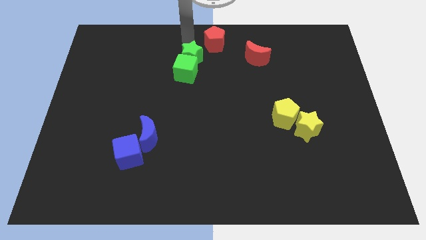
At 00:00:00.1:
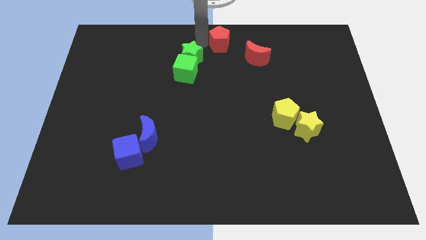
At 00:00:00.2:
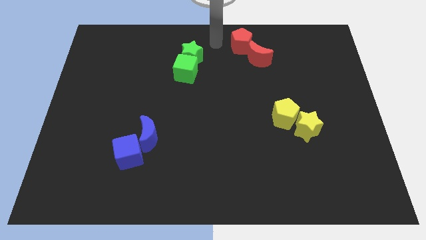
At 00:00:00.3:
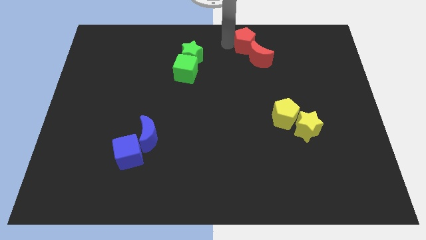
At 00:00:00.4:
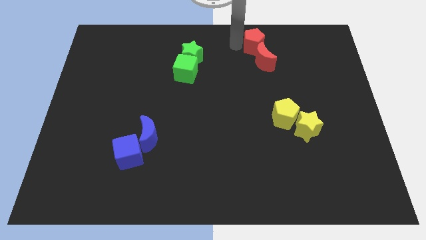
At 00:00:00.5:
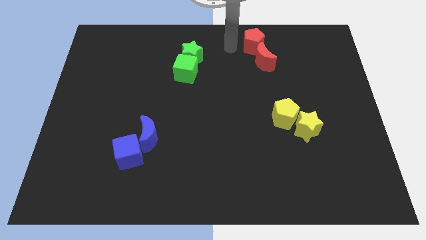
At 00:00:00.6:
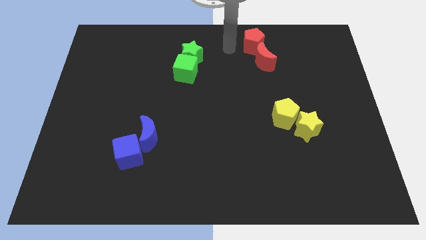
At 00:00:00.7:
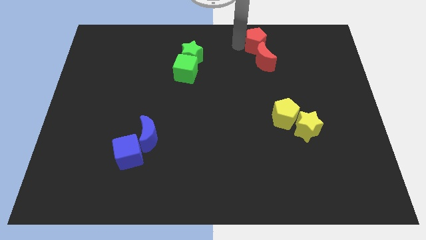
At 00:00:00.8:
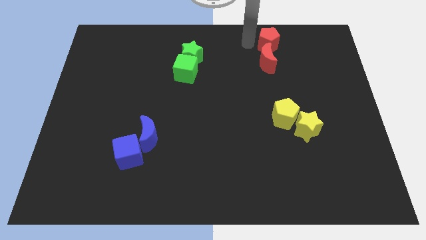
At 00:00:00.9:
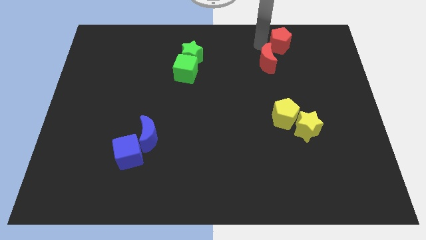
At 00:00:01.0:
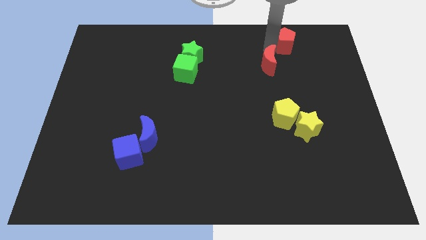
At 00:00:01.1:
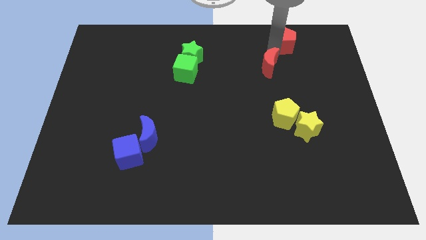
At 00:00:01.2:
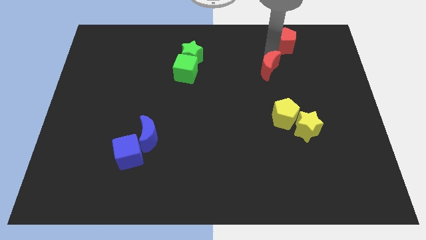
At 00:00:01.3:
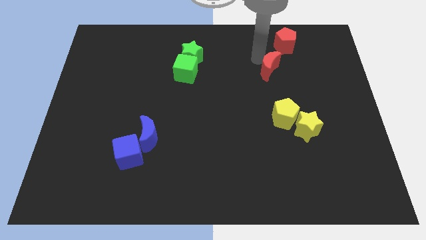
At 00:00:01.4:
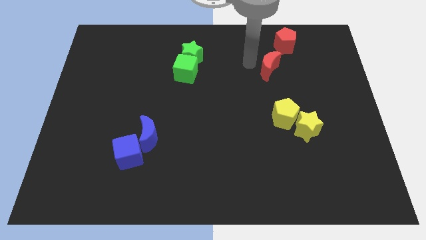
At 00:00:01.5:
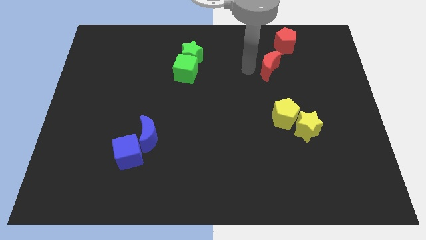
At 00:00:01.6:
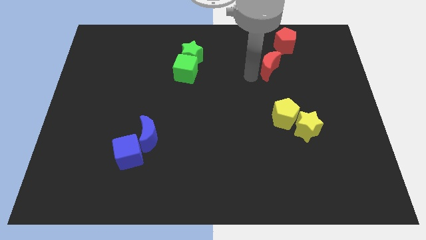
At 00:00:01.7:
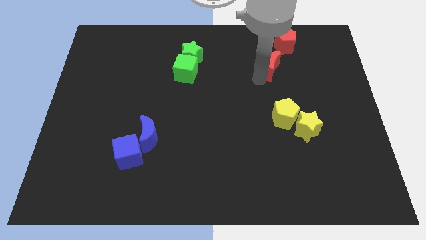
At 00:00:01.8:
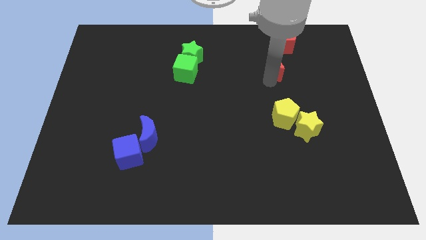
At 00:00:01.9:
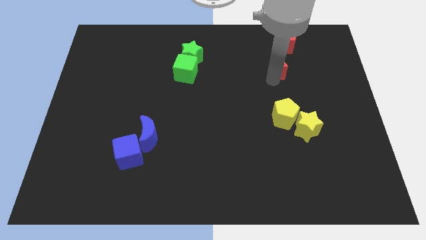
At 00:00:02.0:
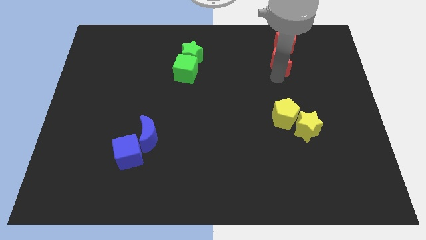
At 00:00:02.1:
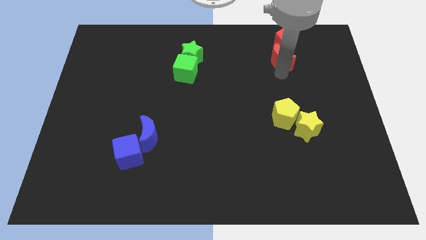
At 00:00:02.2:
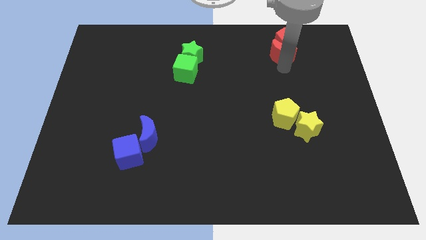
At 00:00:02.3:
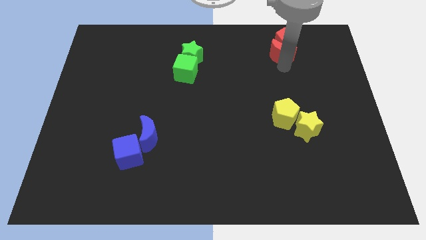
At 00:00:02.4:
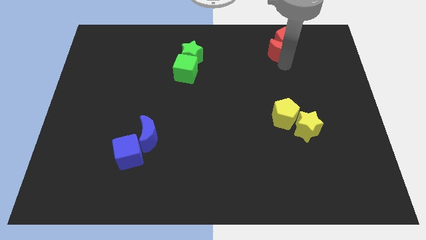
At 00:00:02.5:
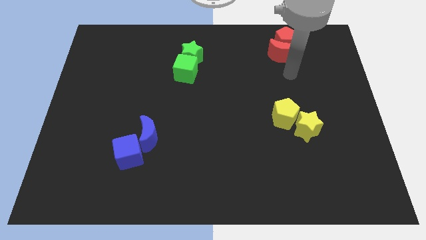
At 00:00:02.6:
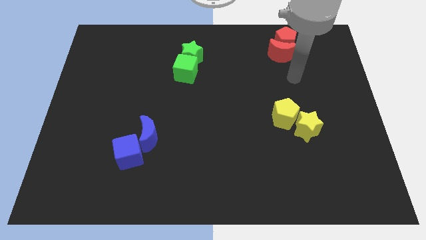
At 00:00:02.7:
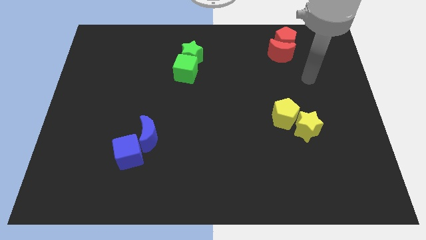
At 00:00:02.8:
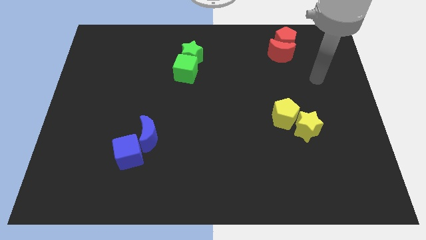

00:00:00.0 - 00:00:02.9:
move the red blocks towards the top right corner of the board

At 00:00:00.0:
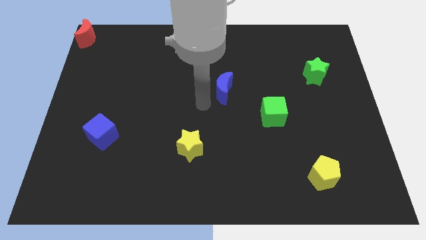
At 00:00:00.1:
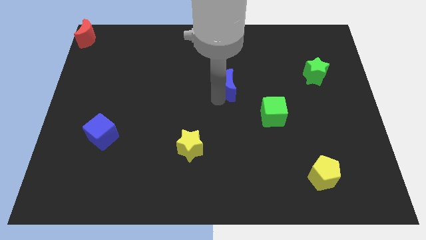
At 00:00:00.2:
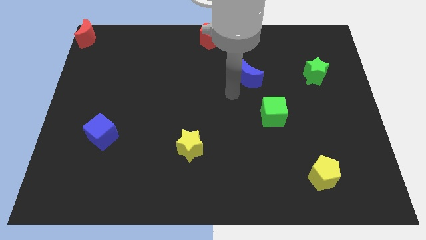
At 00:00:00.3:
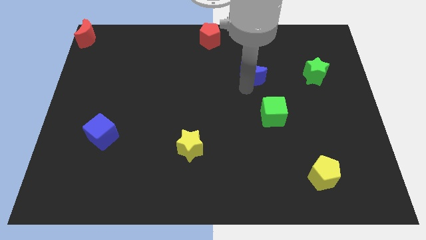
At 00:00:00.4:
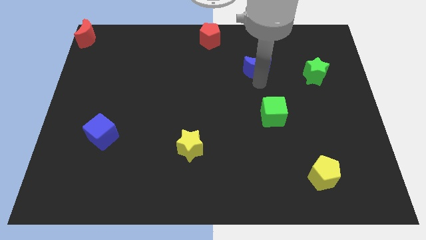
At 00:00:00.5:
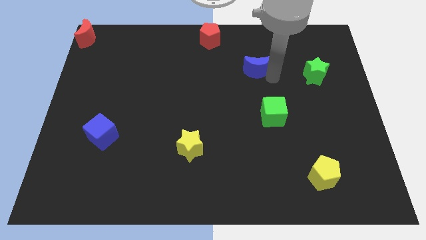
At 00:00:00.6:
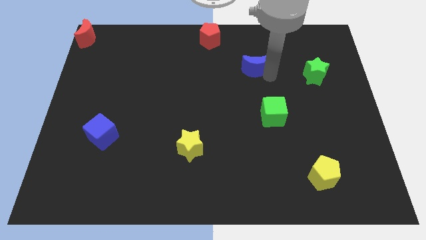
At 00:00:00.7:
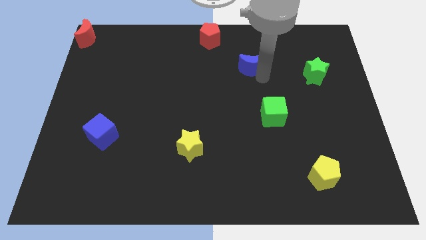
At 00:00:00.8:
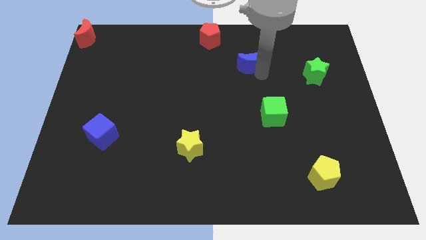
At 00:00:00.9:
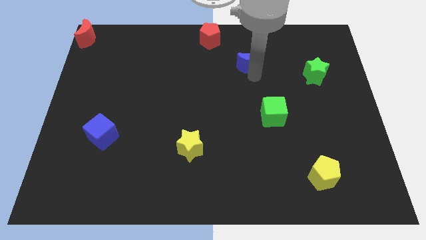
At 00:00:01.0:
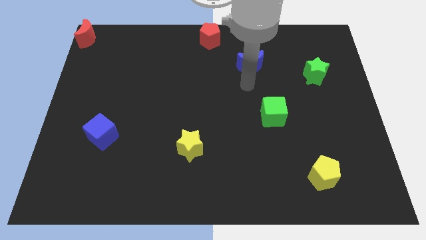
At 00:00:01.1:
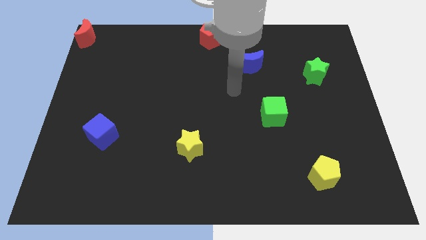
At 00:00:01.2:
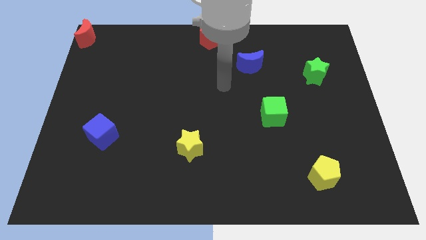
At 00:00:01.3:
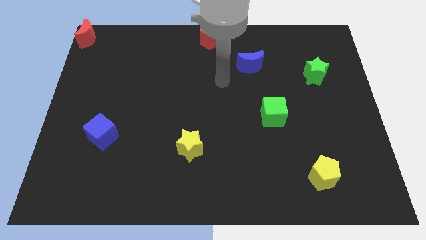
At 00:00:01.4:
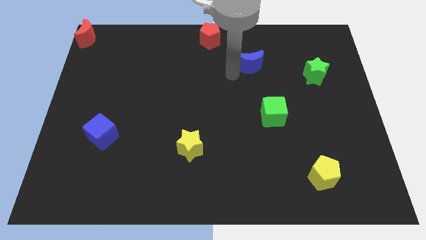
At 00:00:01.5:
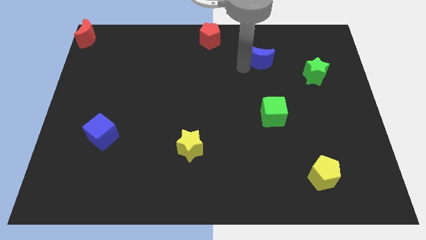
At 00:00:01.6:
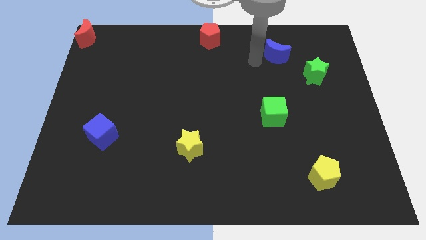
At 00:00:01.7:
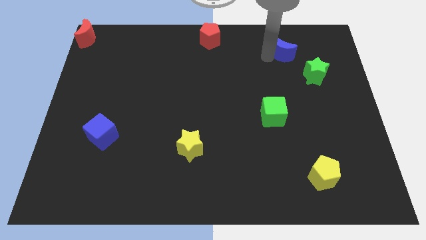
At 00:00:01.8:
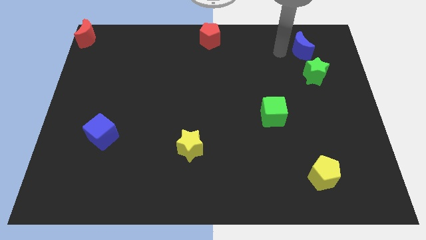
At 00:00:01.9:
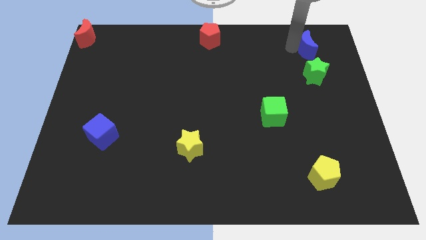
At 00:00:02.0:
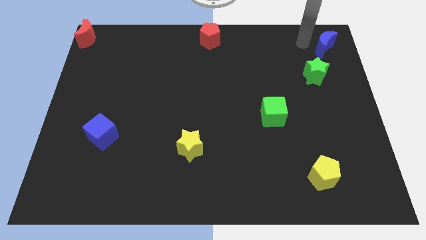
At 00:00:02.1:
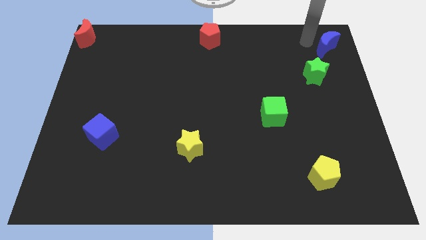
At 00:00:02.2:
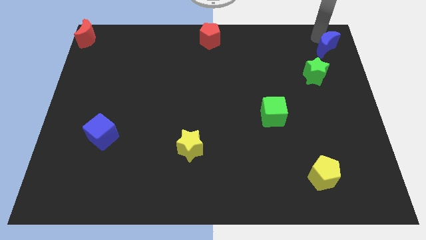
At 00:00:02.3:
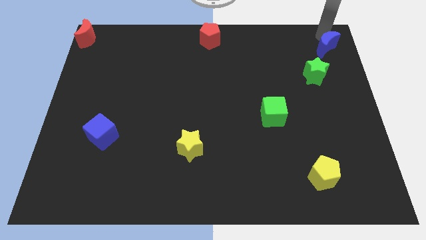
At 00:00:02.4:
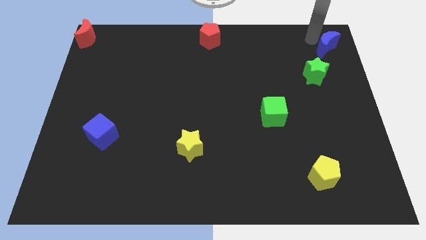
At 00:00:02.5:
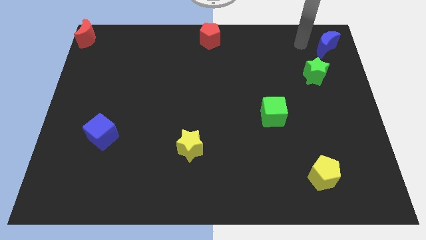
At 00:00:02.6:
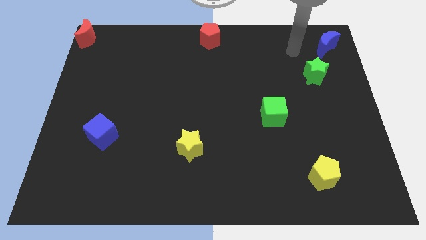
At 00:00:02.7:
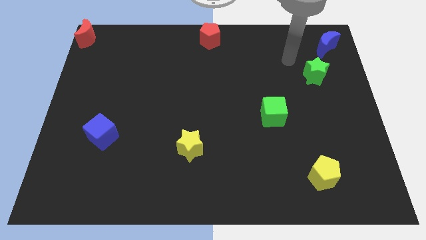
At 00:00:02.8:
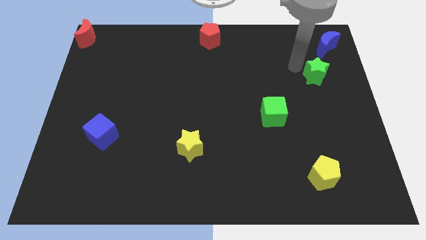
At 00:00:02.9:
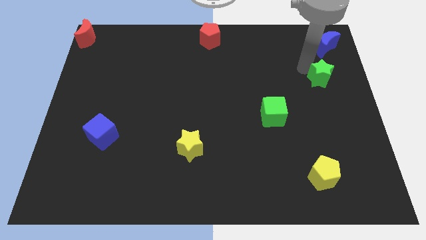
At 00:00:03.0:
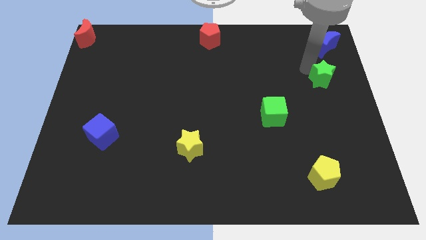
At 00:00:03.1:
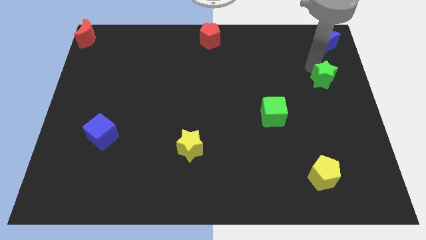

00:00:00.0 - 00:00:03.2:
move the blue moon above the green star

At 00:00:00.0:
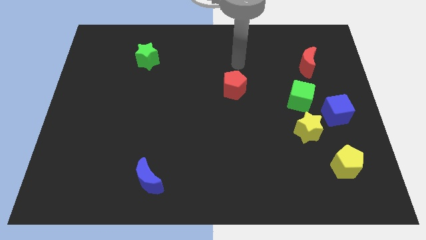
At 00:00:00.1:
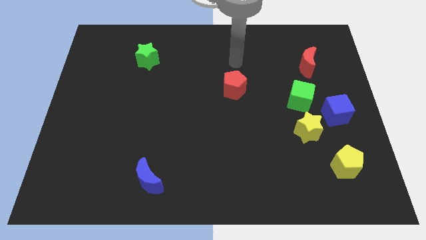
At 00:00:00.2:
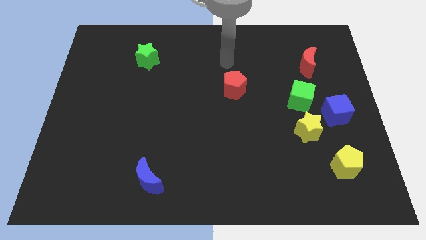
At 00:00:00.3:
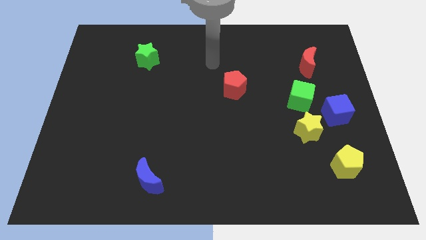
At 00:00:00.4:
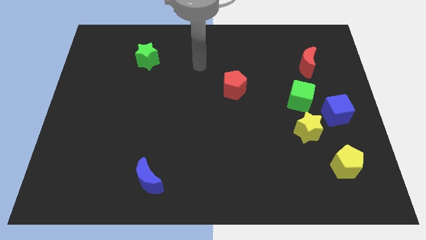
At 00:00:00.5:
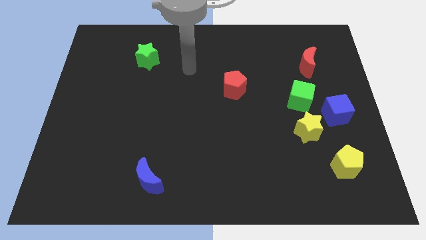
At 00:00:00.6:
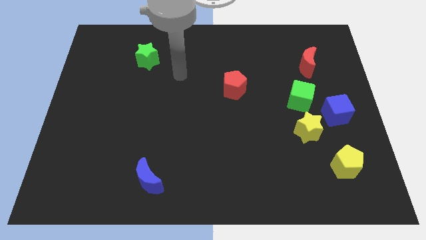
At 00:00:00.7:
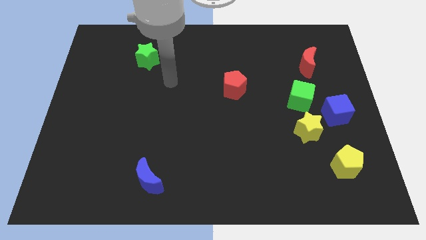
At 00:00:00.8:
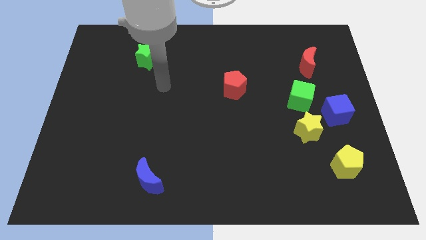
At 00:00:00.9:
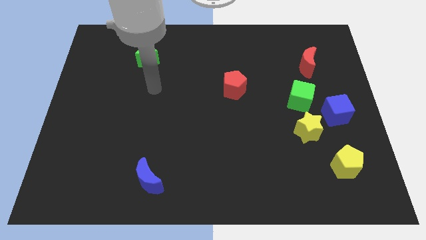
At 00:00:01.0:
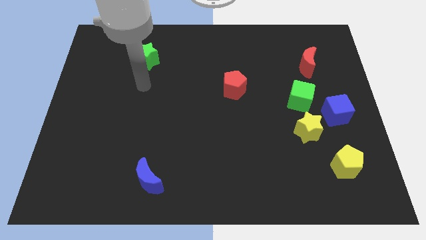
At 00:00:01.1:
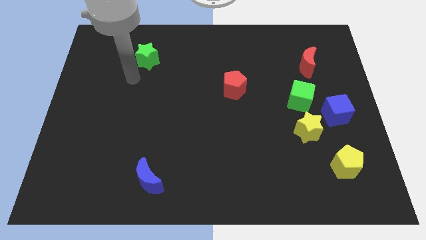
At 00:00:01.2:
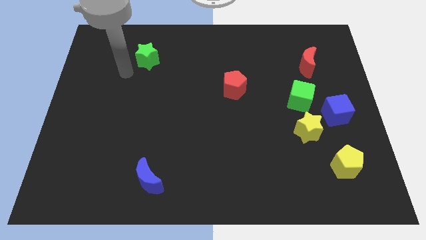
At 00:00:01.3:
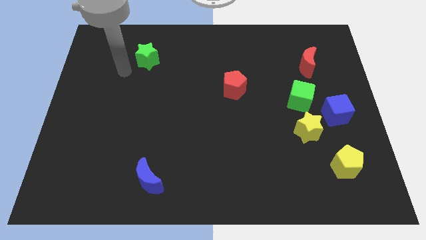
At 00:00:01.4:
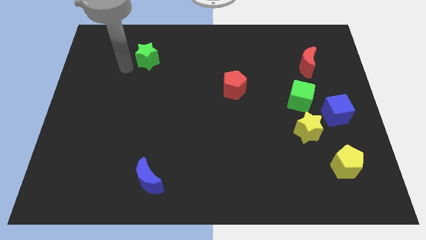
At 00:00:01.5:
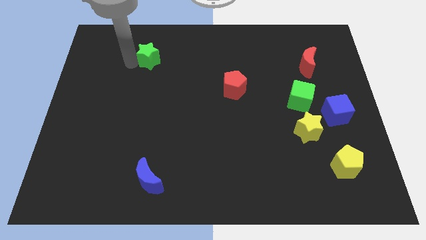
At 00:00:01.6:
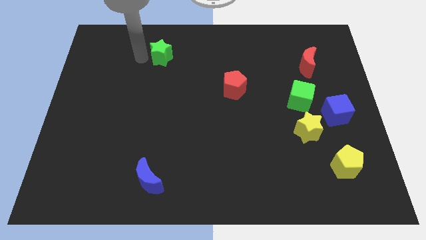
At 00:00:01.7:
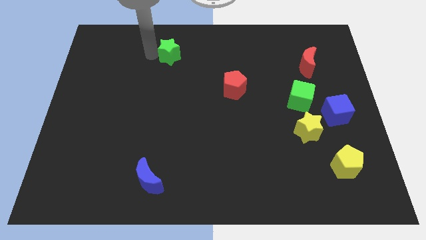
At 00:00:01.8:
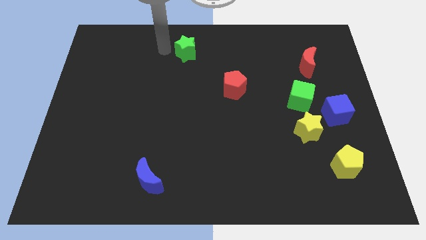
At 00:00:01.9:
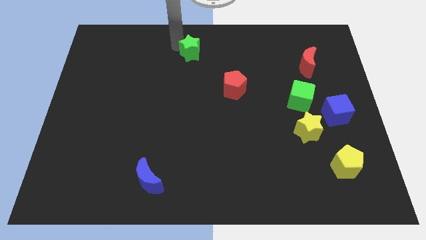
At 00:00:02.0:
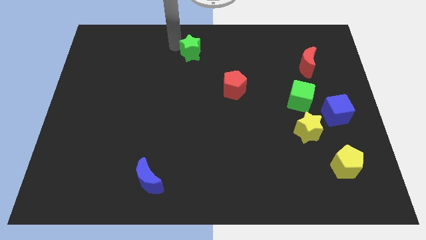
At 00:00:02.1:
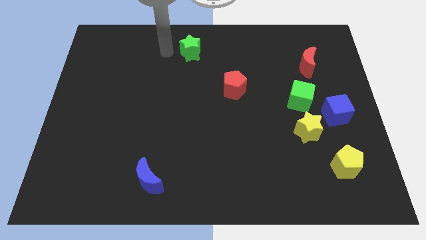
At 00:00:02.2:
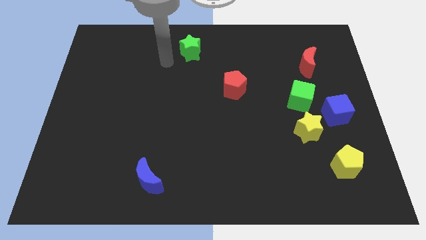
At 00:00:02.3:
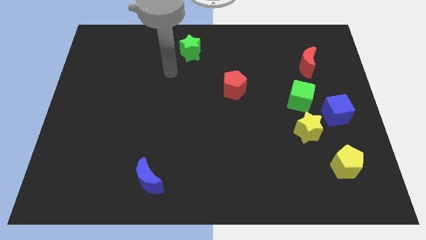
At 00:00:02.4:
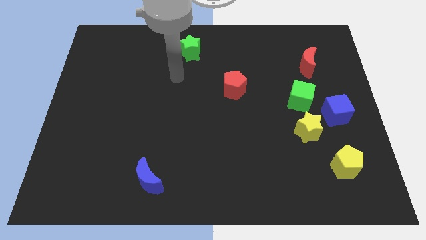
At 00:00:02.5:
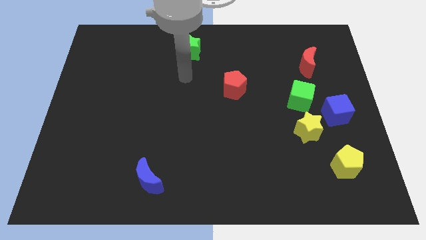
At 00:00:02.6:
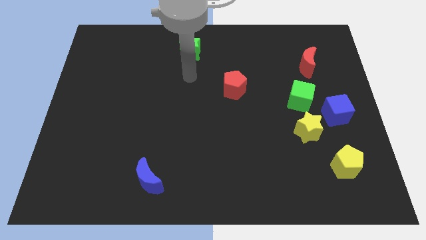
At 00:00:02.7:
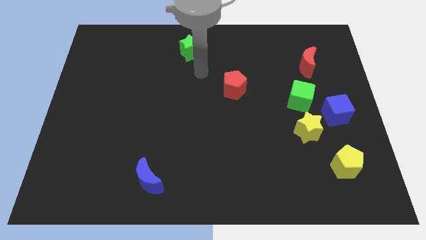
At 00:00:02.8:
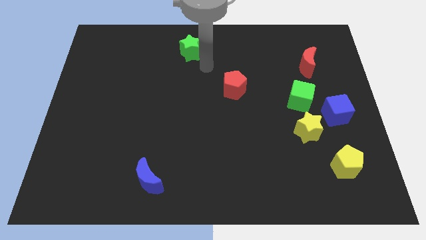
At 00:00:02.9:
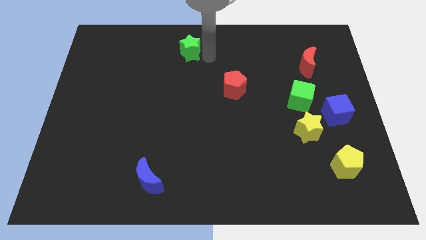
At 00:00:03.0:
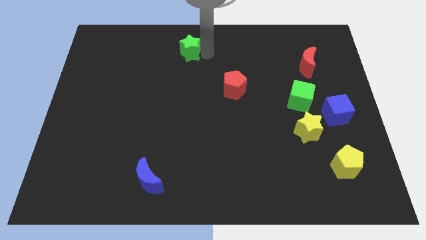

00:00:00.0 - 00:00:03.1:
place green star to the top left of red pentagon
